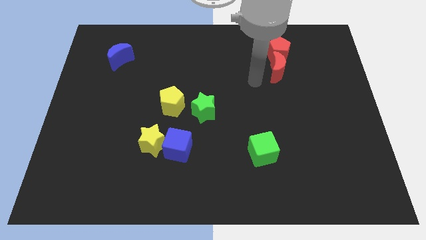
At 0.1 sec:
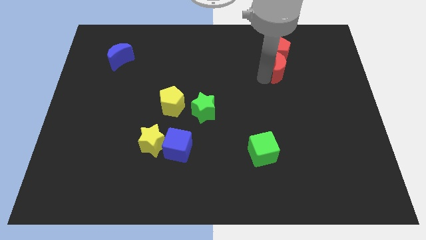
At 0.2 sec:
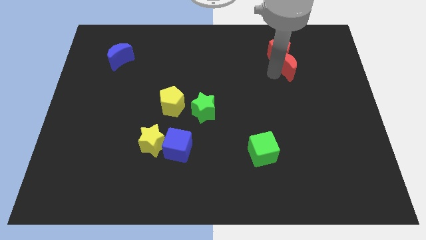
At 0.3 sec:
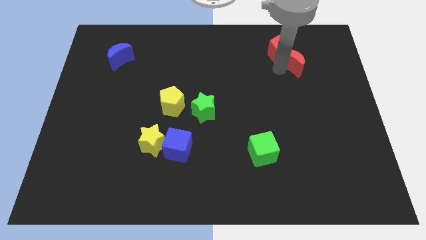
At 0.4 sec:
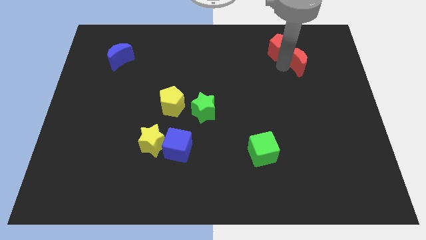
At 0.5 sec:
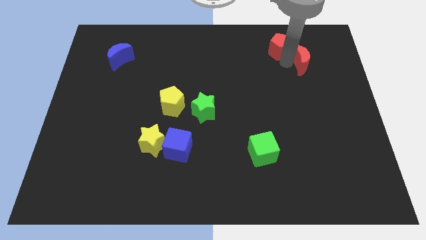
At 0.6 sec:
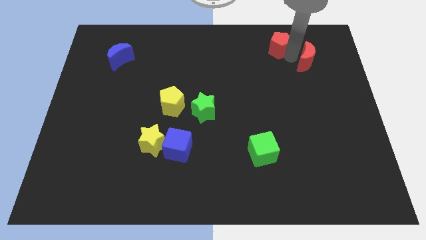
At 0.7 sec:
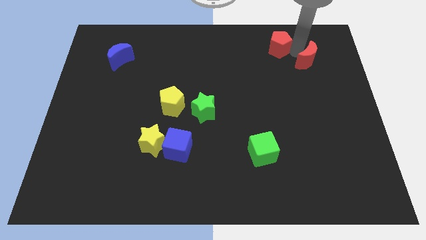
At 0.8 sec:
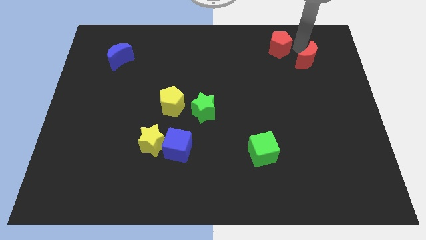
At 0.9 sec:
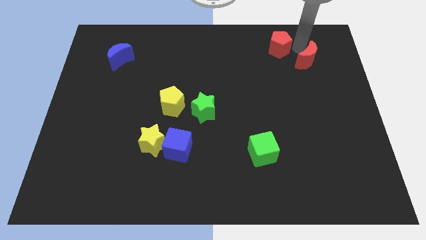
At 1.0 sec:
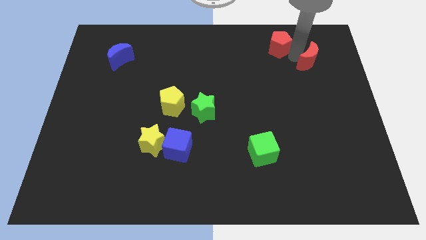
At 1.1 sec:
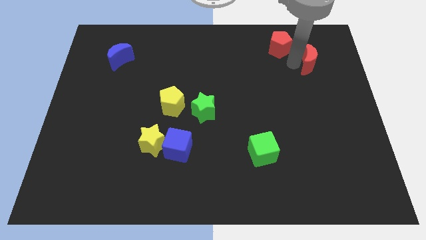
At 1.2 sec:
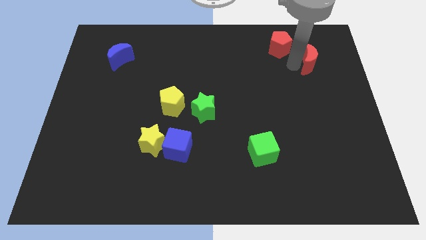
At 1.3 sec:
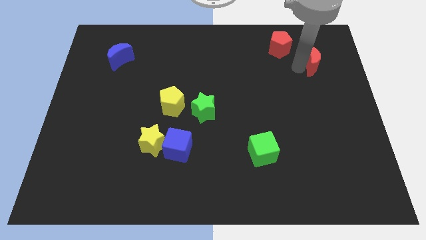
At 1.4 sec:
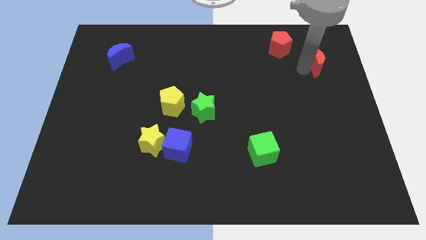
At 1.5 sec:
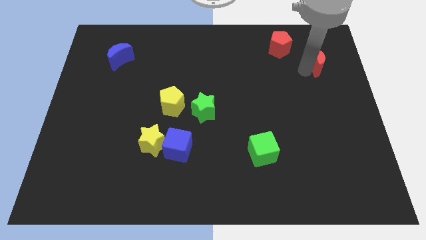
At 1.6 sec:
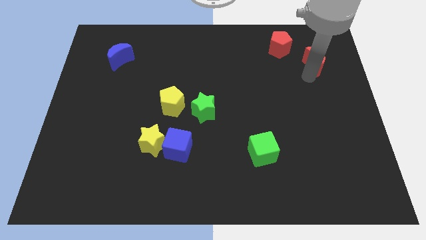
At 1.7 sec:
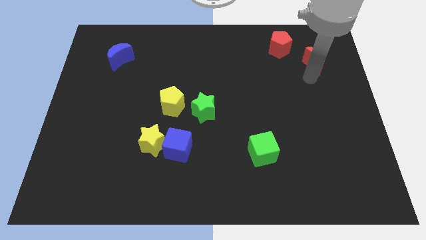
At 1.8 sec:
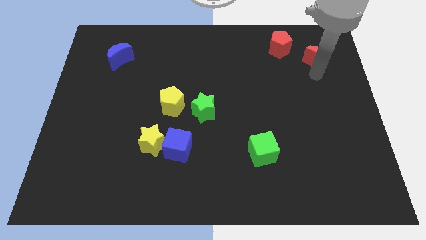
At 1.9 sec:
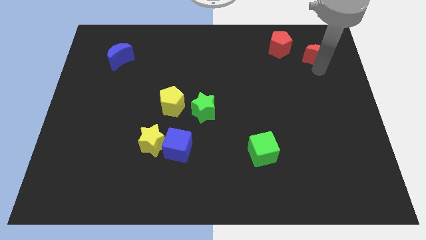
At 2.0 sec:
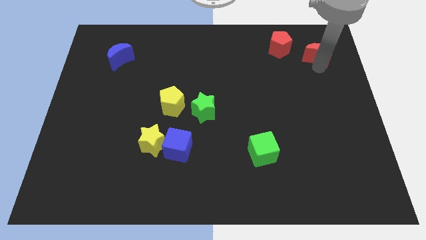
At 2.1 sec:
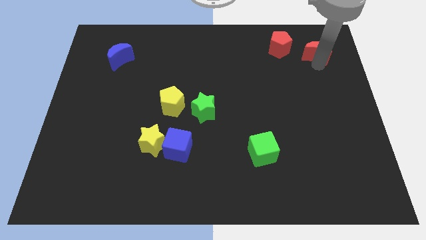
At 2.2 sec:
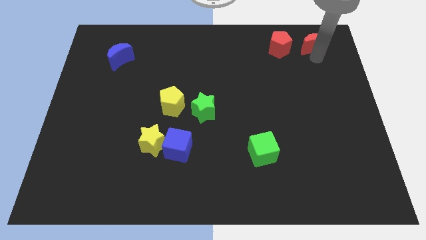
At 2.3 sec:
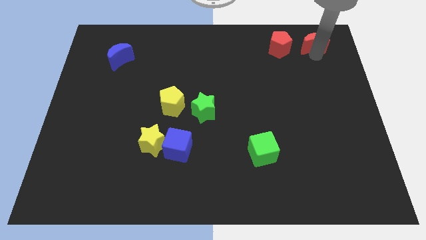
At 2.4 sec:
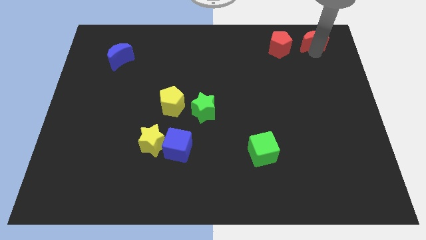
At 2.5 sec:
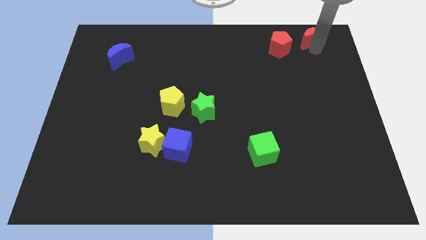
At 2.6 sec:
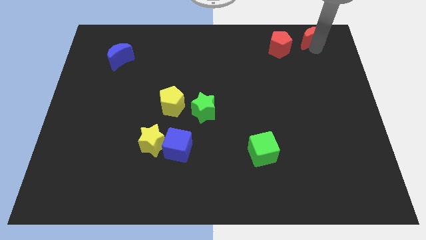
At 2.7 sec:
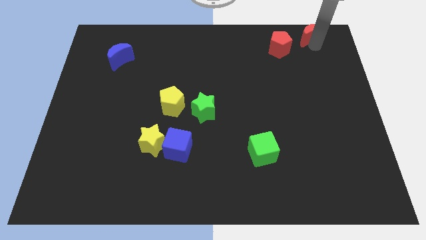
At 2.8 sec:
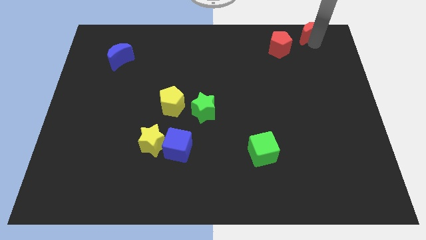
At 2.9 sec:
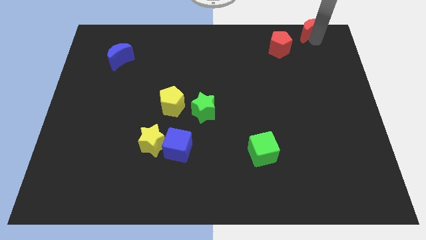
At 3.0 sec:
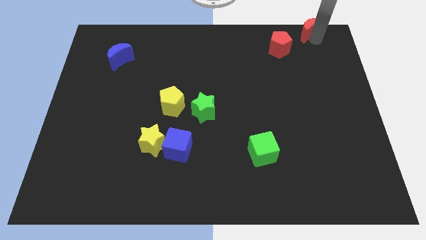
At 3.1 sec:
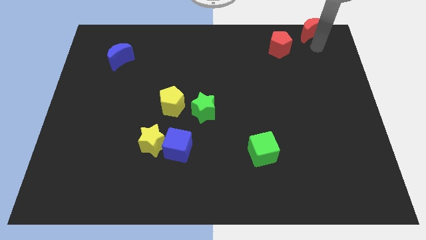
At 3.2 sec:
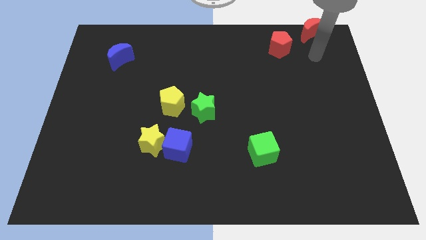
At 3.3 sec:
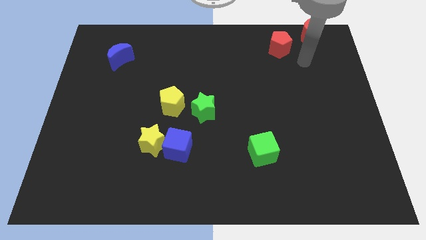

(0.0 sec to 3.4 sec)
push the red crescent towards the top right side of the board

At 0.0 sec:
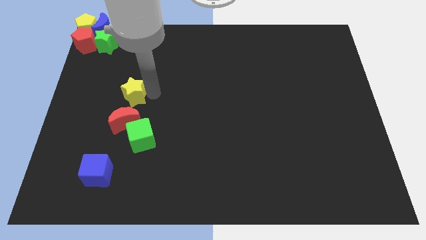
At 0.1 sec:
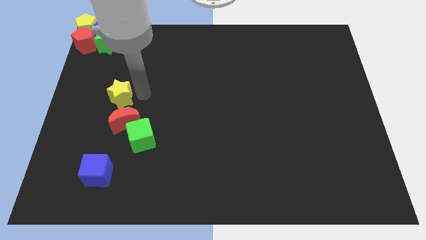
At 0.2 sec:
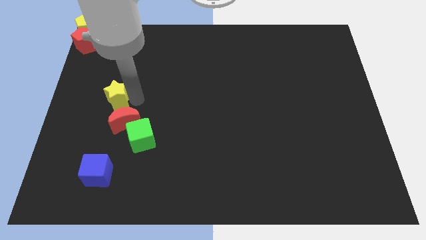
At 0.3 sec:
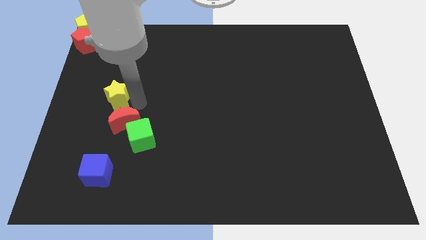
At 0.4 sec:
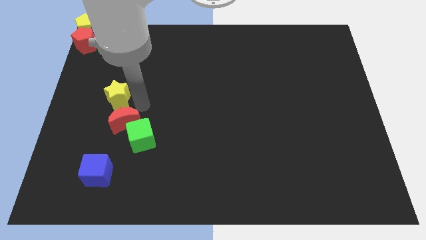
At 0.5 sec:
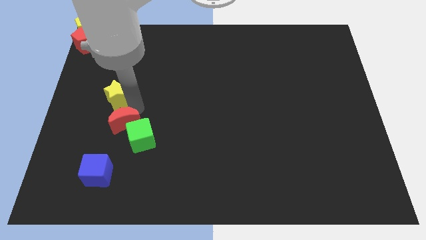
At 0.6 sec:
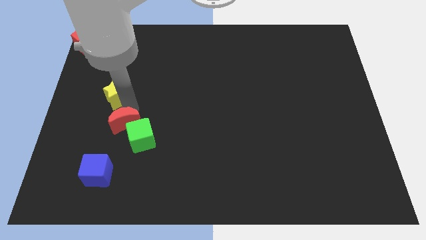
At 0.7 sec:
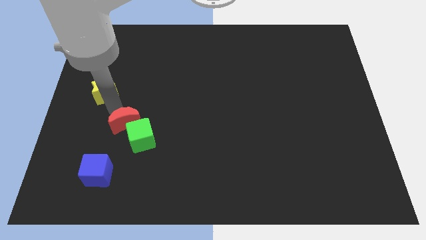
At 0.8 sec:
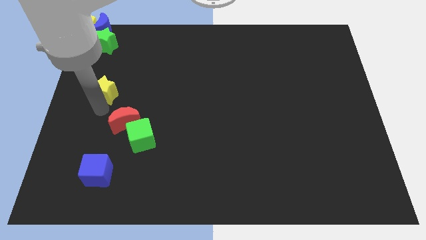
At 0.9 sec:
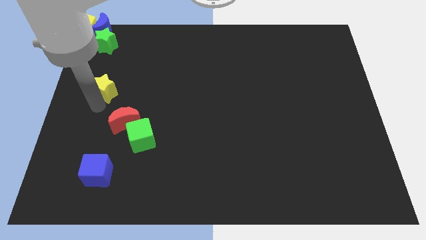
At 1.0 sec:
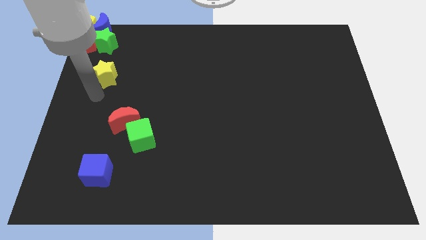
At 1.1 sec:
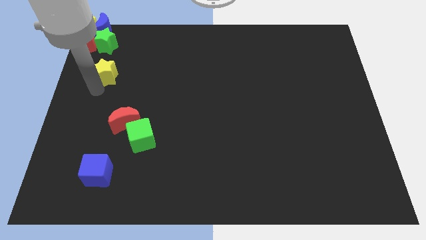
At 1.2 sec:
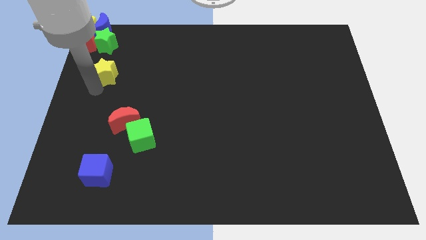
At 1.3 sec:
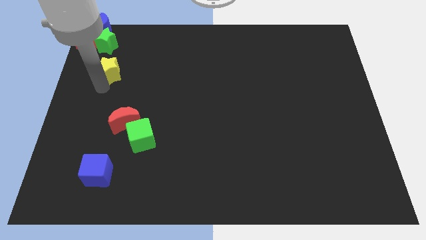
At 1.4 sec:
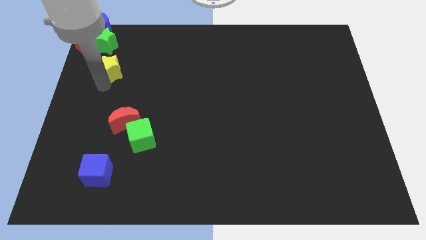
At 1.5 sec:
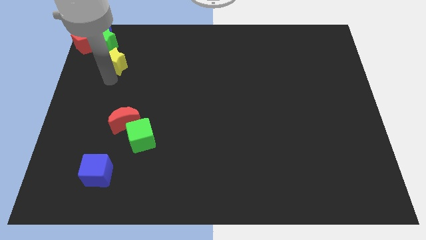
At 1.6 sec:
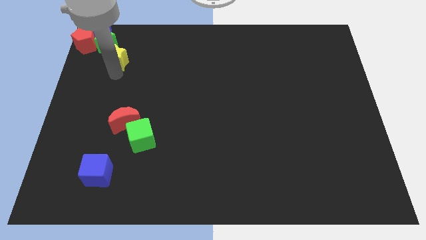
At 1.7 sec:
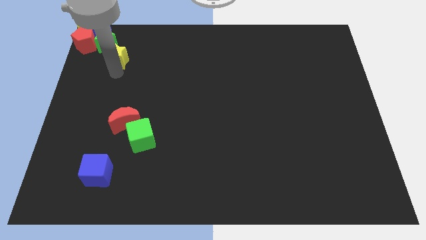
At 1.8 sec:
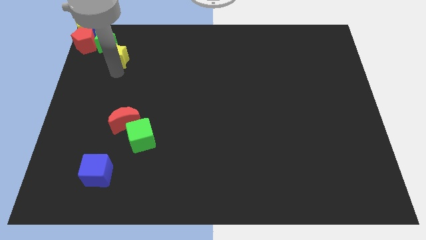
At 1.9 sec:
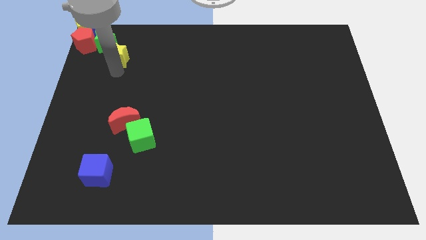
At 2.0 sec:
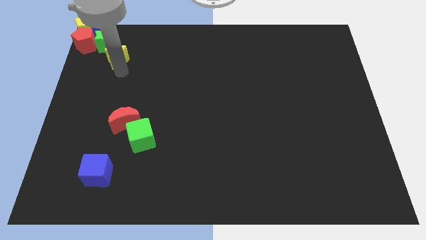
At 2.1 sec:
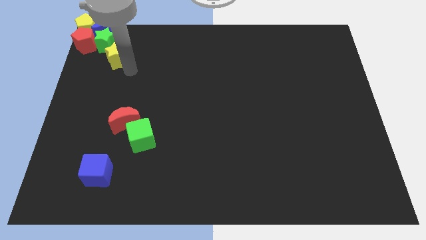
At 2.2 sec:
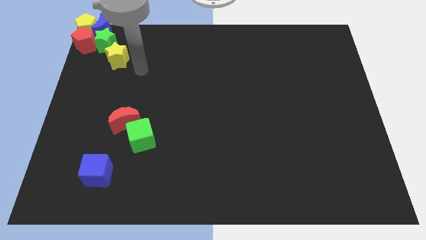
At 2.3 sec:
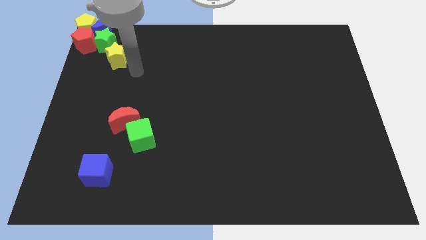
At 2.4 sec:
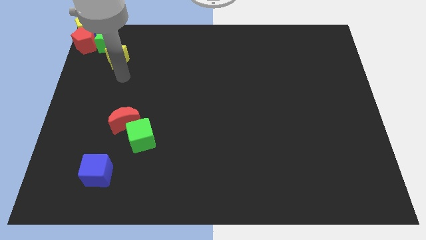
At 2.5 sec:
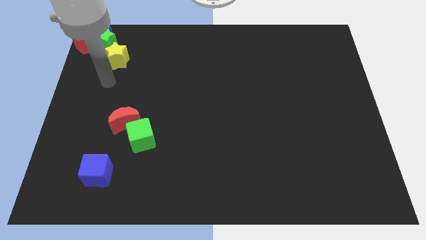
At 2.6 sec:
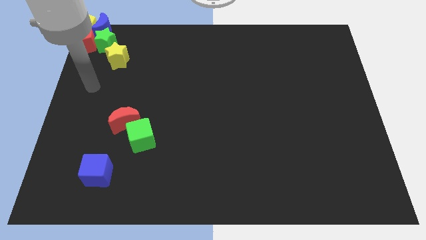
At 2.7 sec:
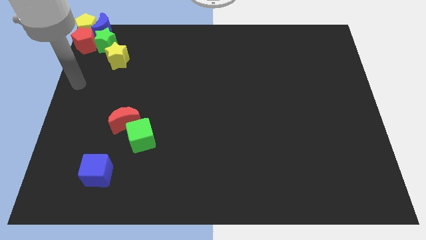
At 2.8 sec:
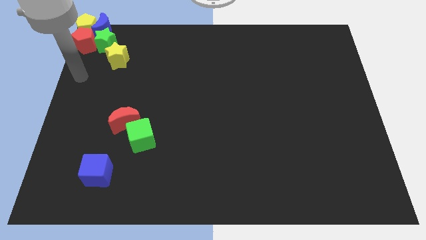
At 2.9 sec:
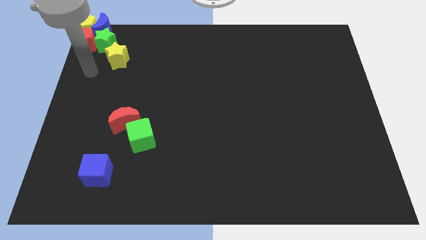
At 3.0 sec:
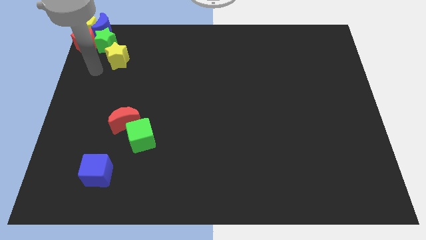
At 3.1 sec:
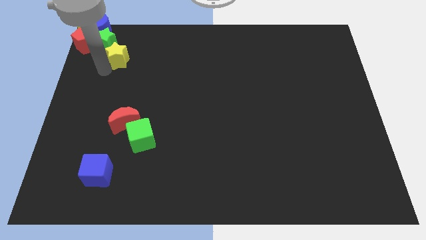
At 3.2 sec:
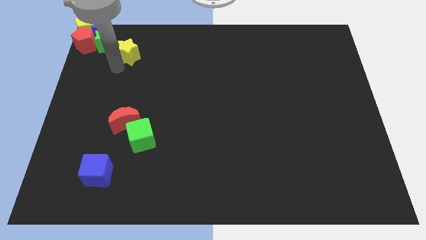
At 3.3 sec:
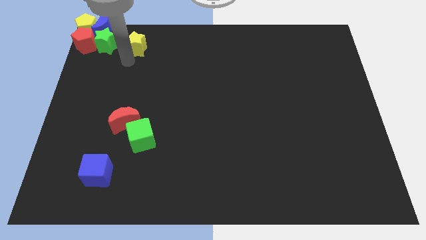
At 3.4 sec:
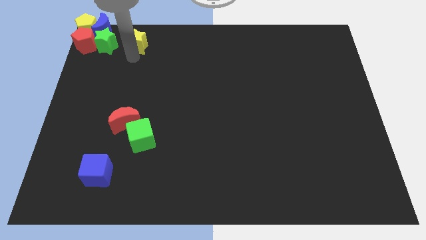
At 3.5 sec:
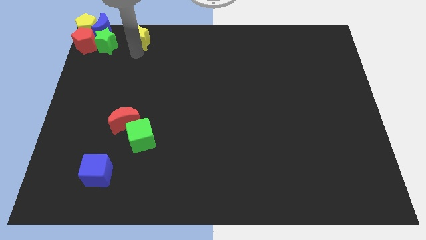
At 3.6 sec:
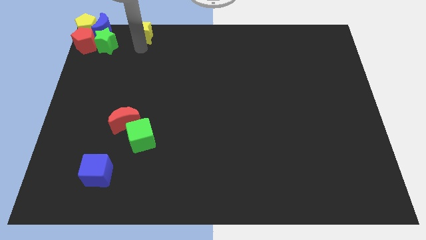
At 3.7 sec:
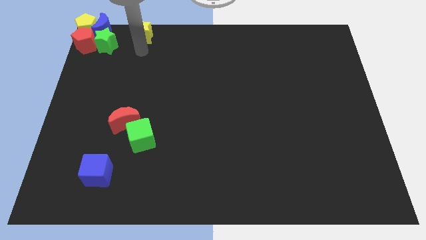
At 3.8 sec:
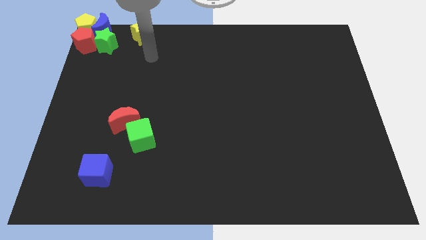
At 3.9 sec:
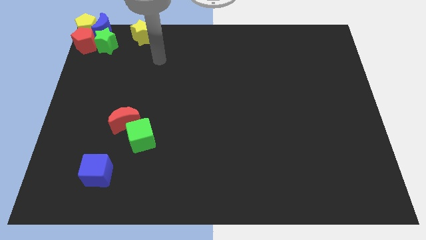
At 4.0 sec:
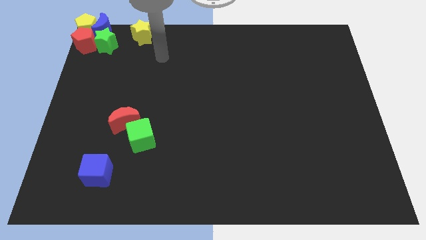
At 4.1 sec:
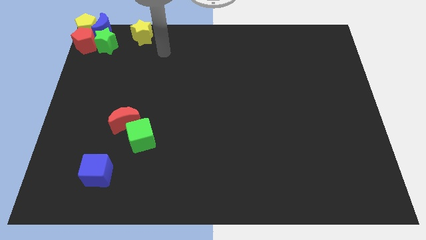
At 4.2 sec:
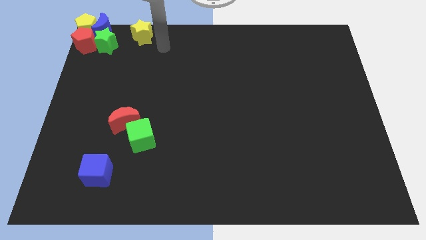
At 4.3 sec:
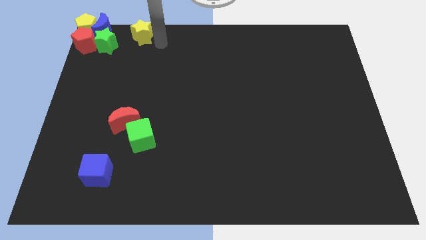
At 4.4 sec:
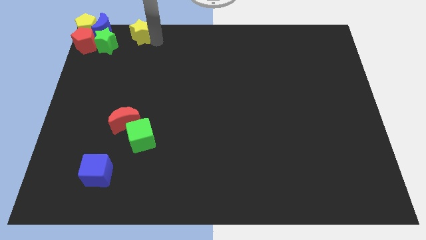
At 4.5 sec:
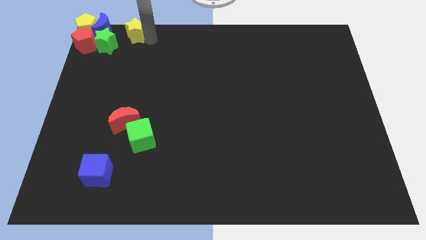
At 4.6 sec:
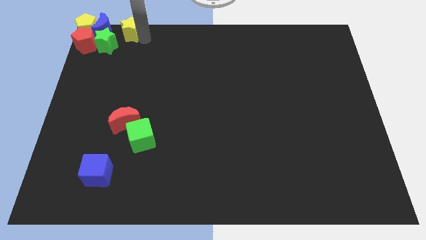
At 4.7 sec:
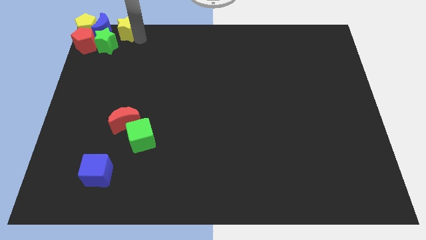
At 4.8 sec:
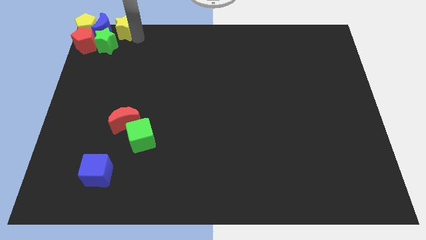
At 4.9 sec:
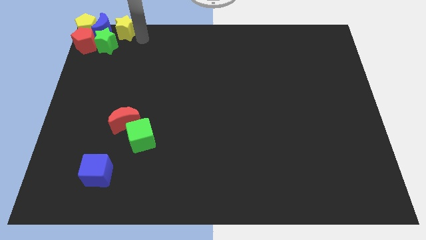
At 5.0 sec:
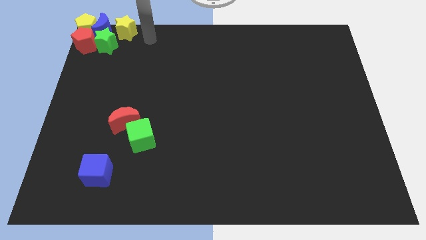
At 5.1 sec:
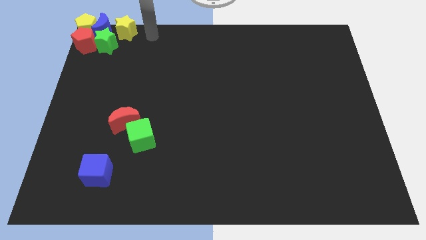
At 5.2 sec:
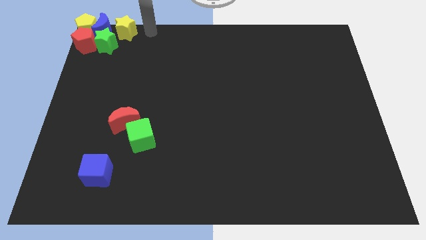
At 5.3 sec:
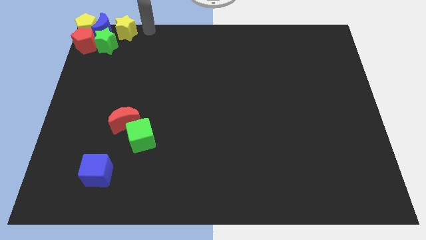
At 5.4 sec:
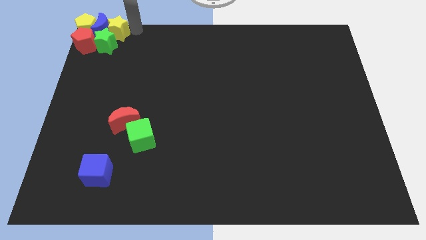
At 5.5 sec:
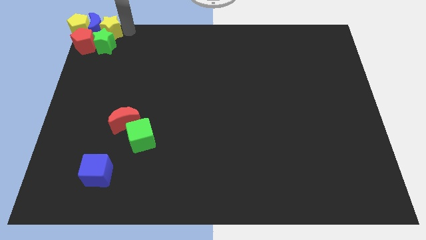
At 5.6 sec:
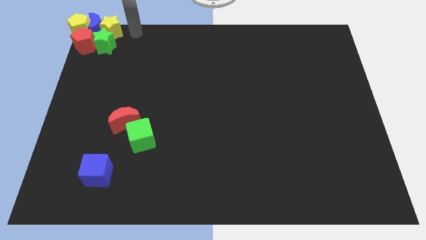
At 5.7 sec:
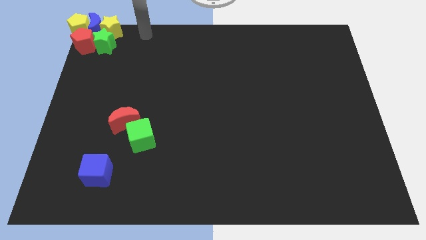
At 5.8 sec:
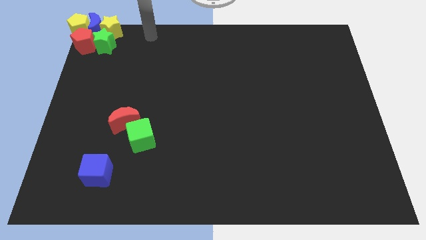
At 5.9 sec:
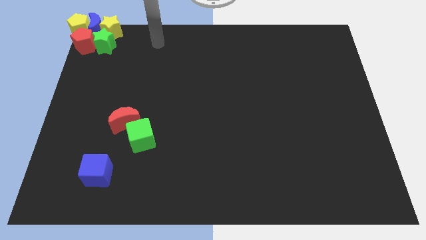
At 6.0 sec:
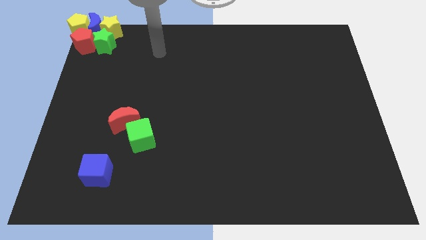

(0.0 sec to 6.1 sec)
push the yellow star into the blue moon
